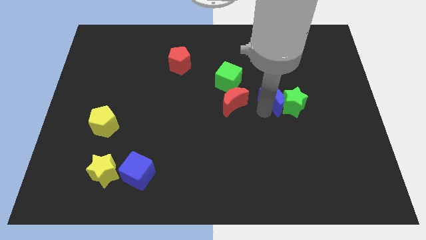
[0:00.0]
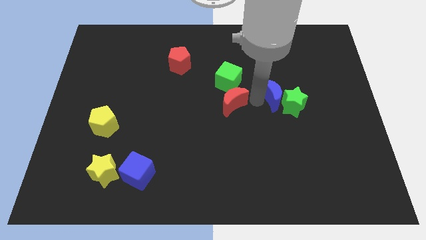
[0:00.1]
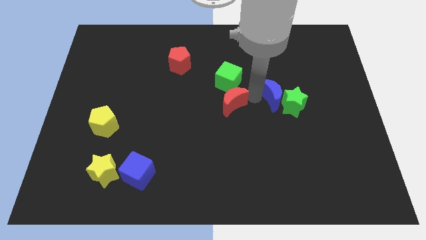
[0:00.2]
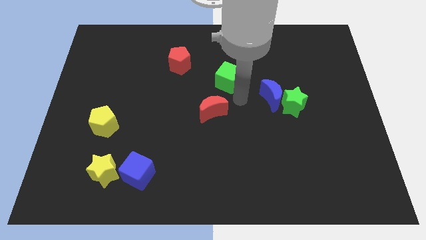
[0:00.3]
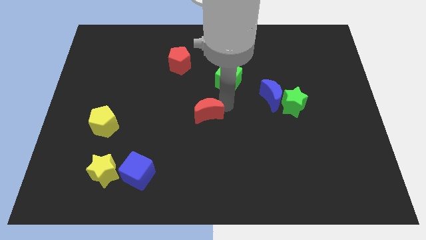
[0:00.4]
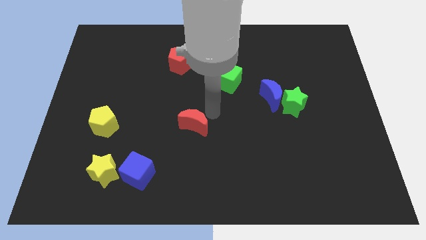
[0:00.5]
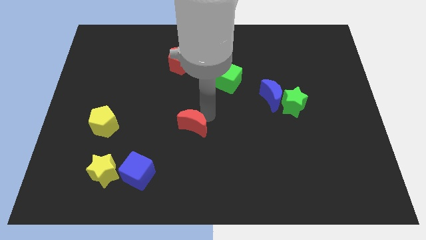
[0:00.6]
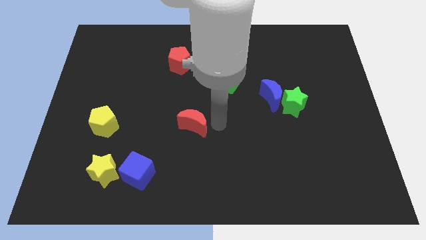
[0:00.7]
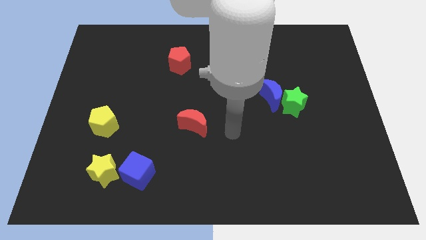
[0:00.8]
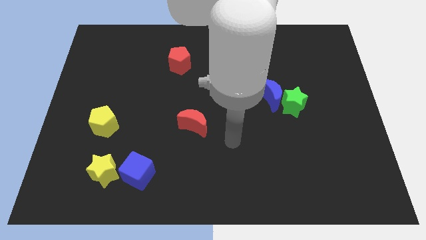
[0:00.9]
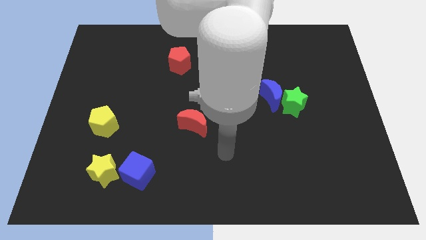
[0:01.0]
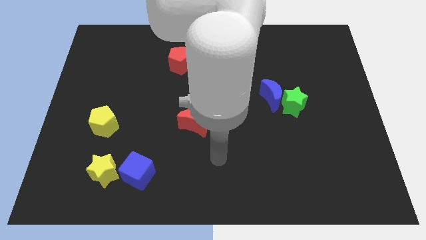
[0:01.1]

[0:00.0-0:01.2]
slightly push red crescent to the bottom center of the board

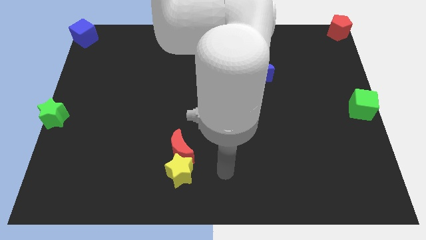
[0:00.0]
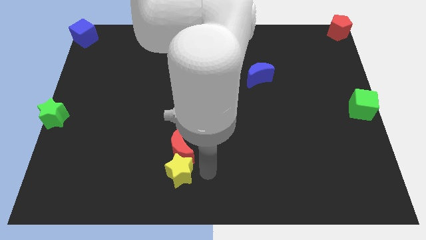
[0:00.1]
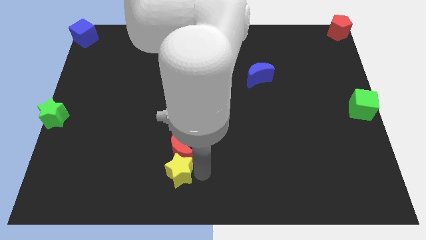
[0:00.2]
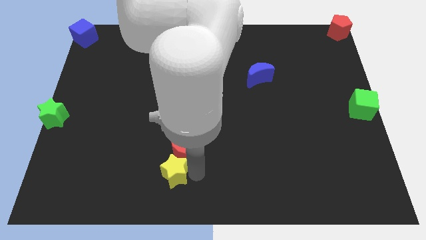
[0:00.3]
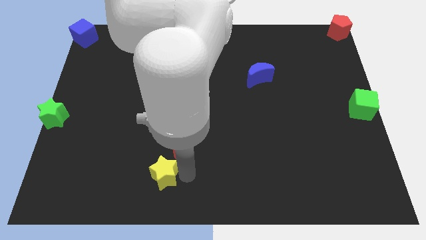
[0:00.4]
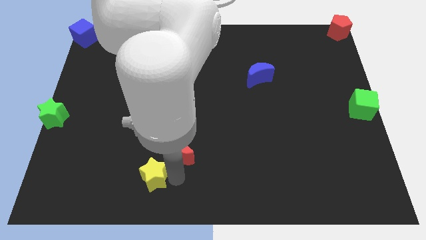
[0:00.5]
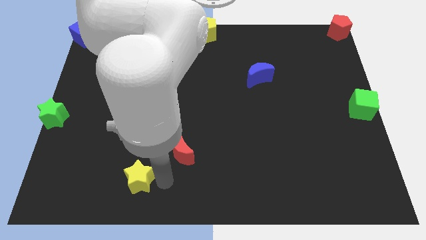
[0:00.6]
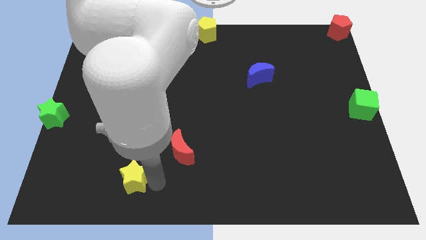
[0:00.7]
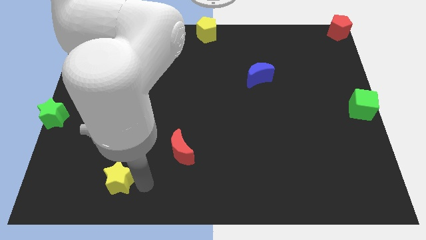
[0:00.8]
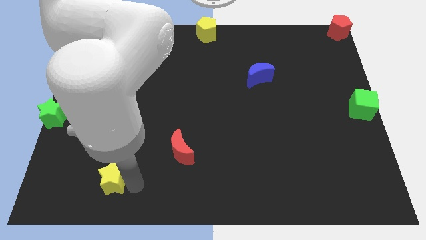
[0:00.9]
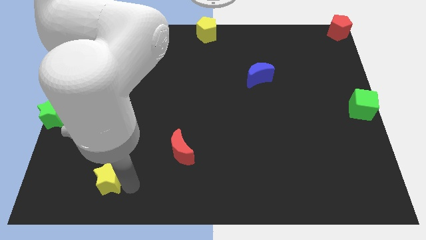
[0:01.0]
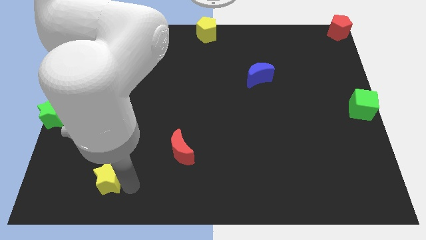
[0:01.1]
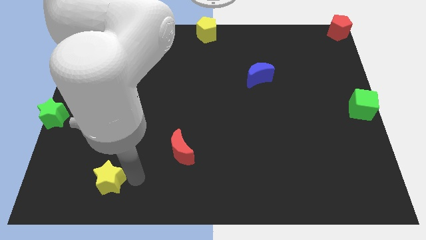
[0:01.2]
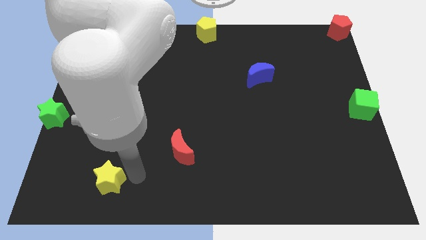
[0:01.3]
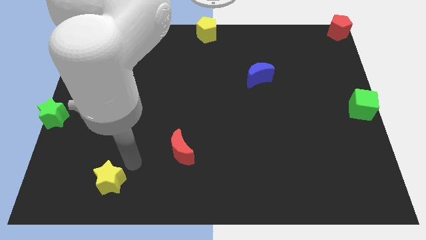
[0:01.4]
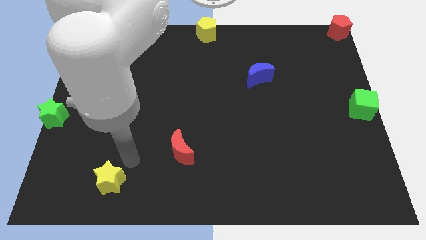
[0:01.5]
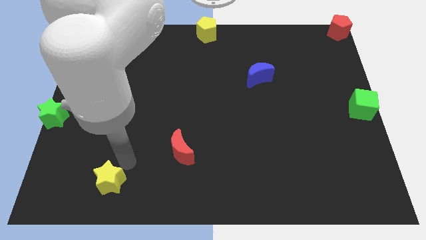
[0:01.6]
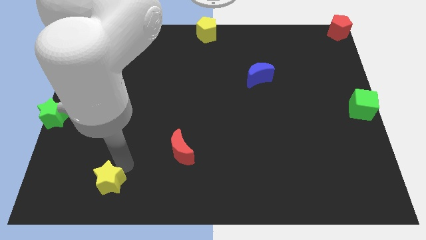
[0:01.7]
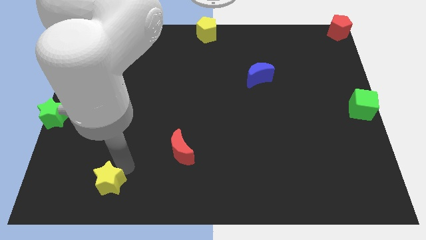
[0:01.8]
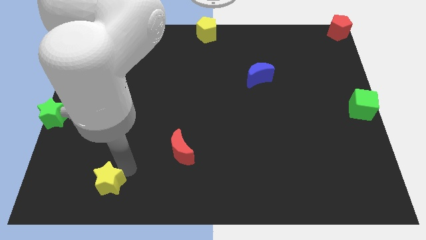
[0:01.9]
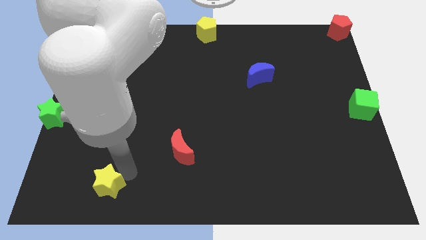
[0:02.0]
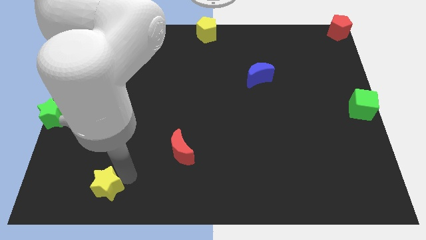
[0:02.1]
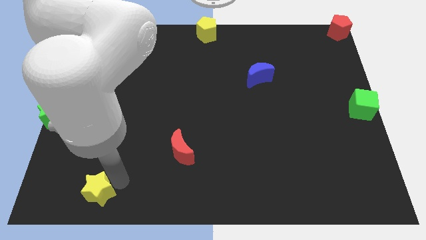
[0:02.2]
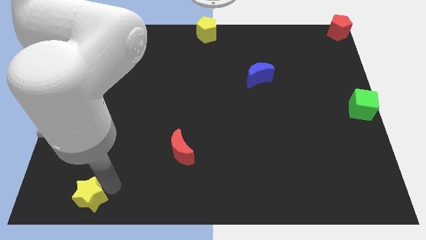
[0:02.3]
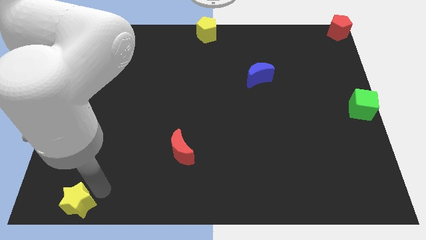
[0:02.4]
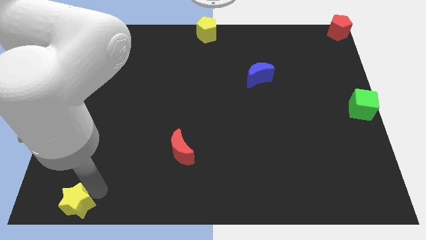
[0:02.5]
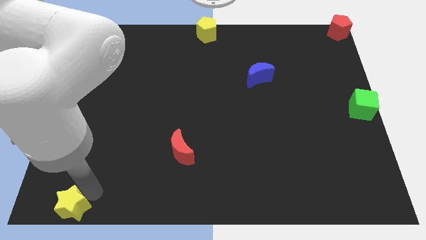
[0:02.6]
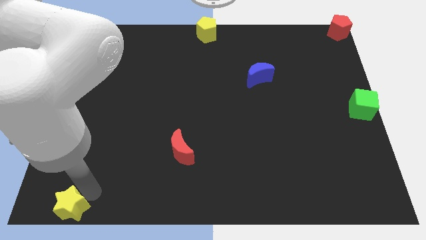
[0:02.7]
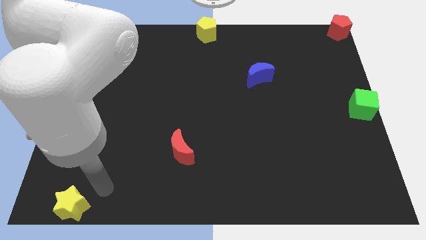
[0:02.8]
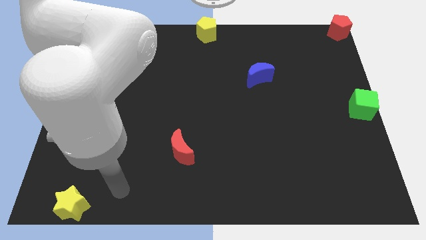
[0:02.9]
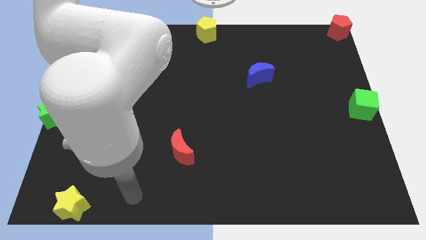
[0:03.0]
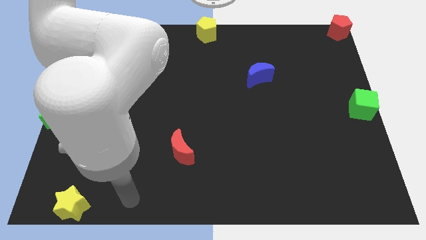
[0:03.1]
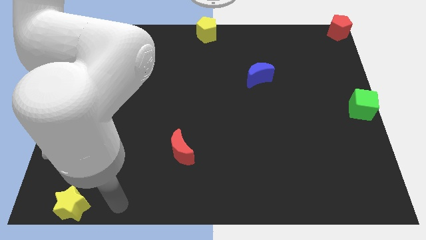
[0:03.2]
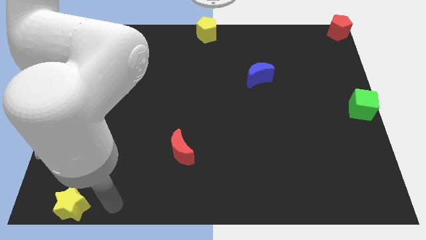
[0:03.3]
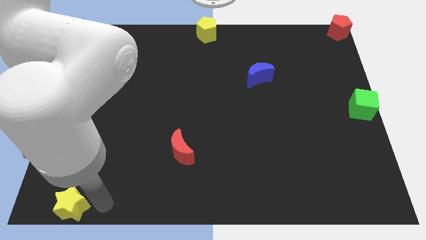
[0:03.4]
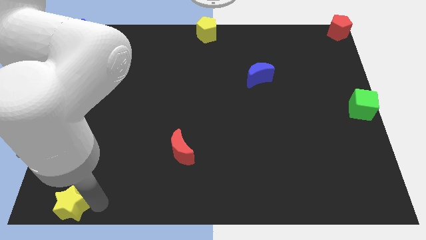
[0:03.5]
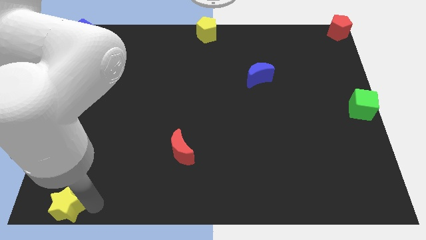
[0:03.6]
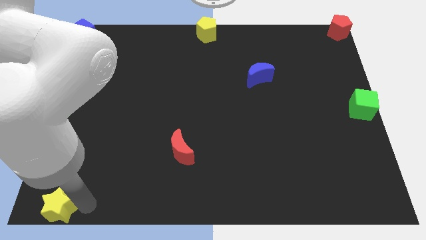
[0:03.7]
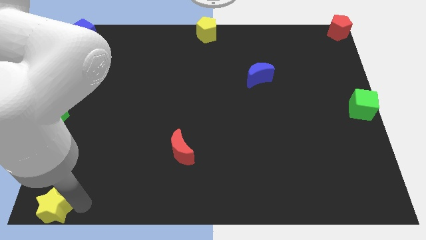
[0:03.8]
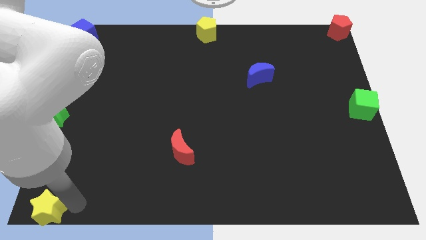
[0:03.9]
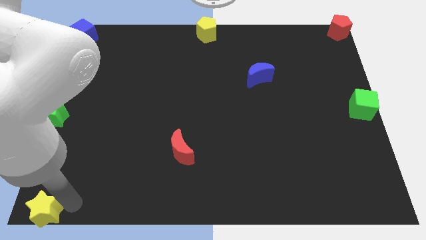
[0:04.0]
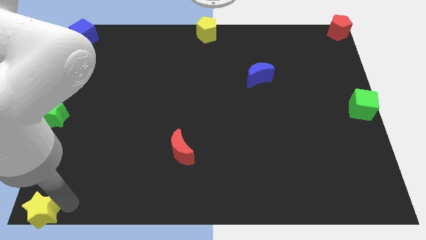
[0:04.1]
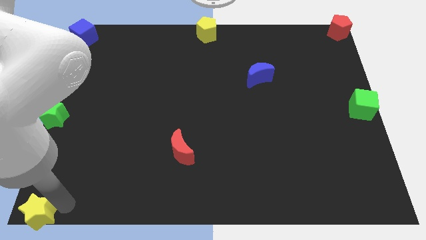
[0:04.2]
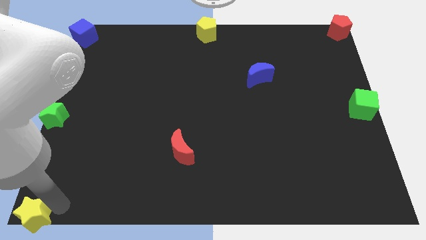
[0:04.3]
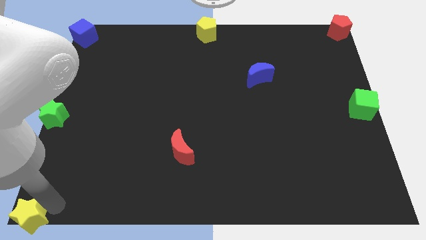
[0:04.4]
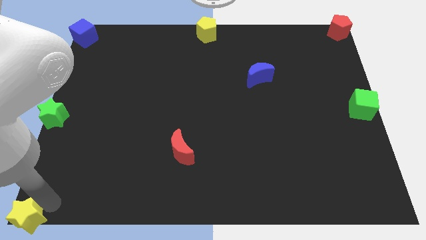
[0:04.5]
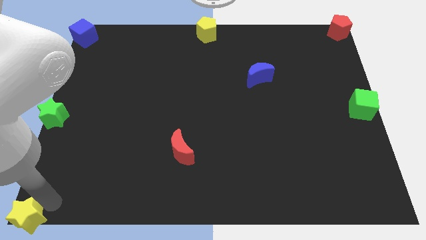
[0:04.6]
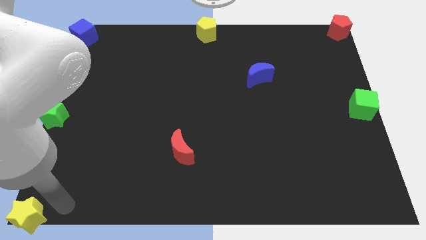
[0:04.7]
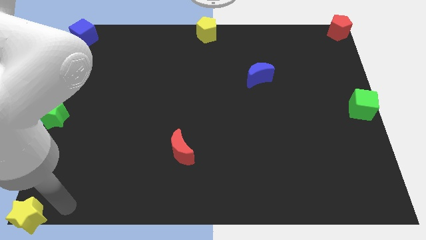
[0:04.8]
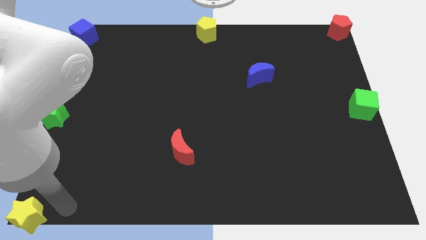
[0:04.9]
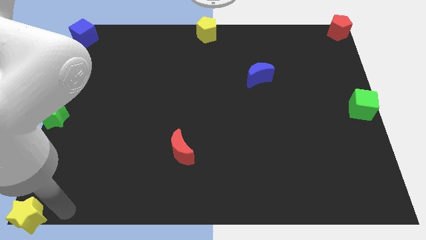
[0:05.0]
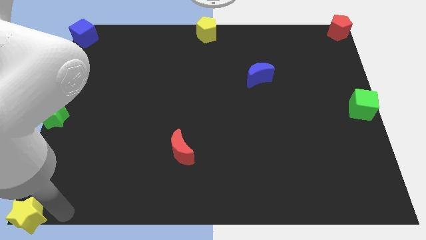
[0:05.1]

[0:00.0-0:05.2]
push yellow star to the bottom left

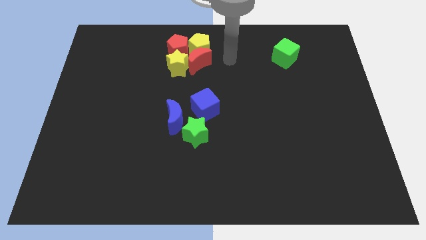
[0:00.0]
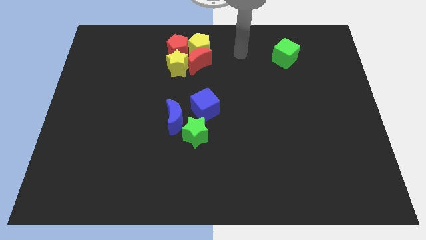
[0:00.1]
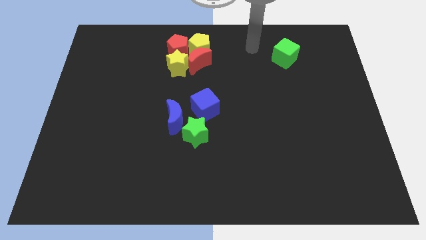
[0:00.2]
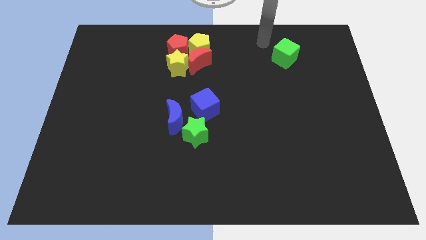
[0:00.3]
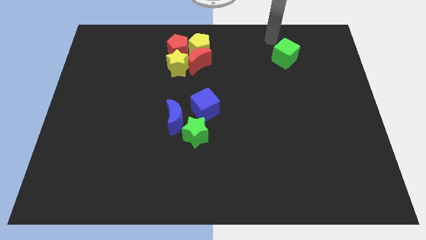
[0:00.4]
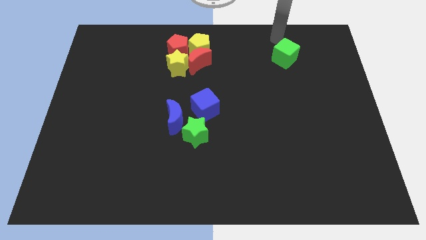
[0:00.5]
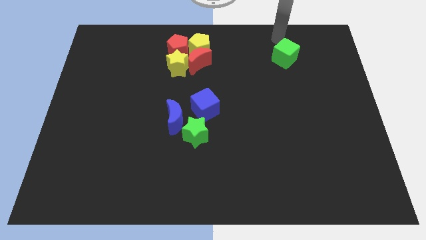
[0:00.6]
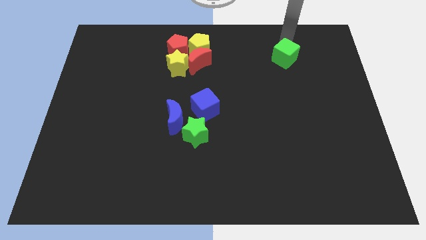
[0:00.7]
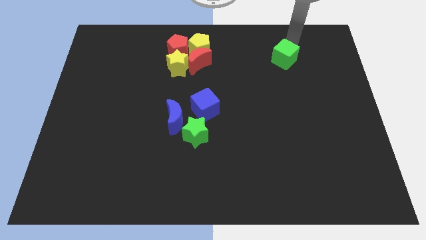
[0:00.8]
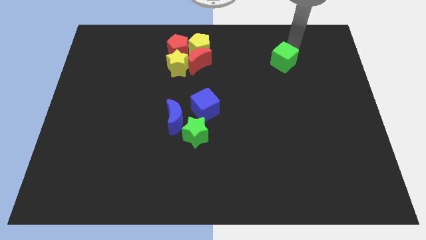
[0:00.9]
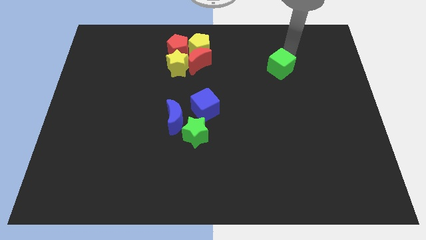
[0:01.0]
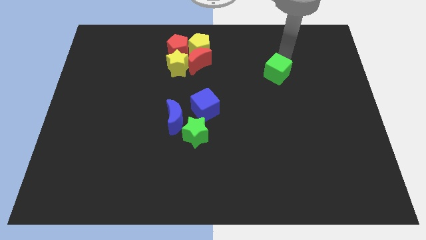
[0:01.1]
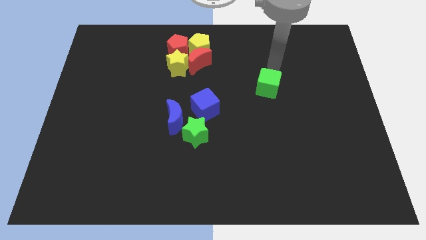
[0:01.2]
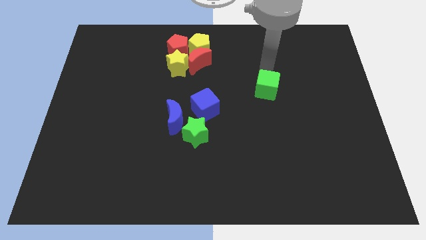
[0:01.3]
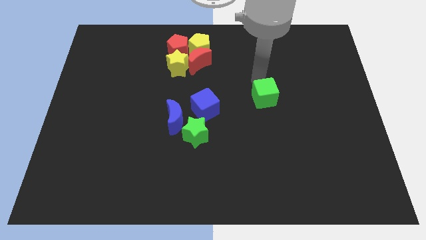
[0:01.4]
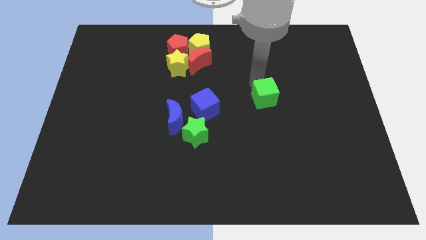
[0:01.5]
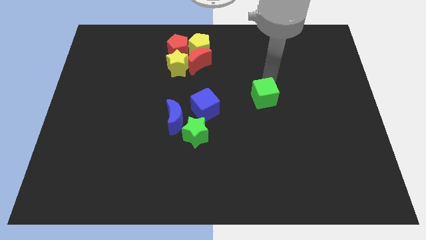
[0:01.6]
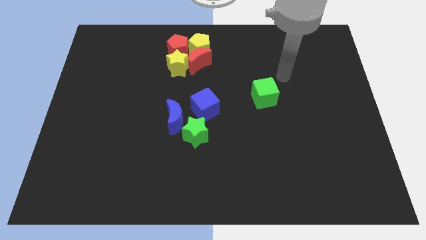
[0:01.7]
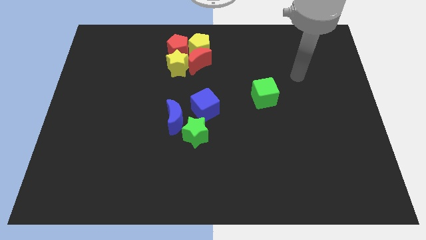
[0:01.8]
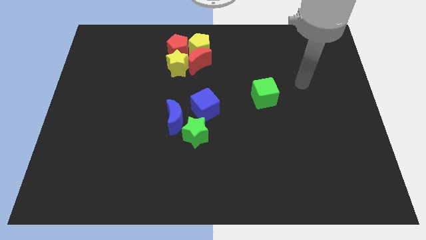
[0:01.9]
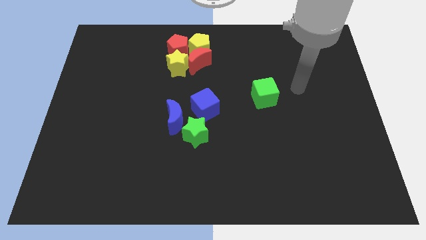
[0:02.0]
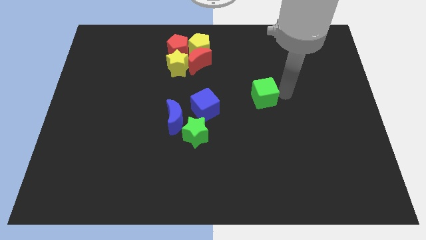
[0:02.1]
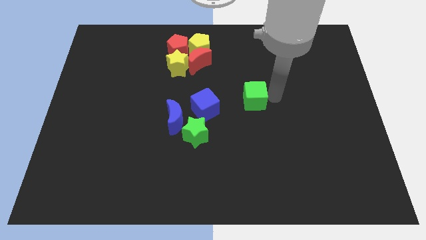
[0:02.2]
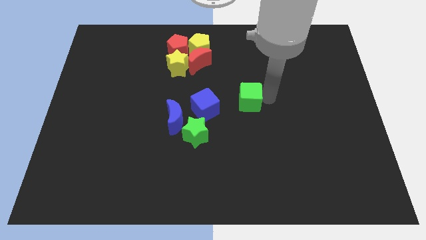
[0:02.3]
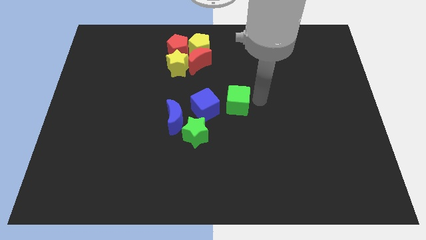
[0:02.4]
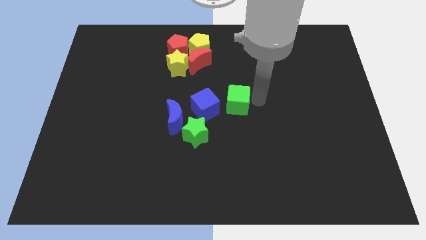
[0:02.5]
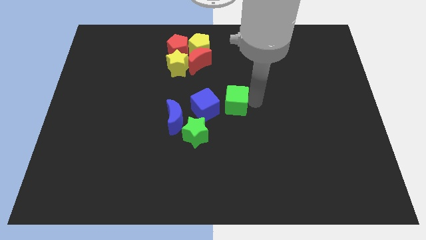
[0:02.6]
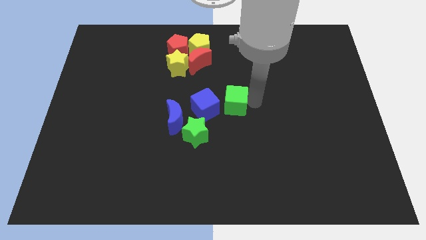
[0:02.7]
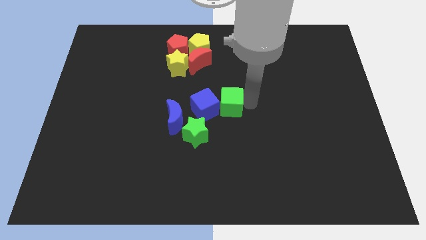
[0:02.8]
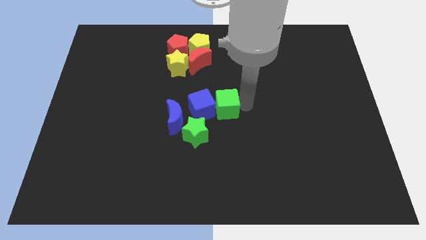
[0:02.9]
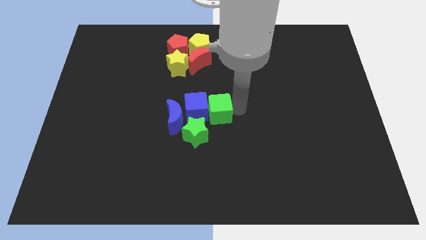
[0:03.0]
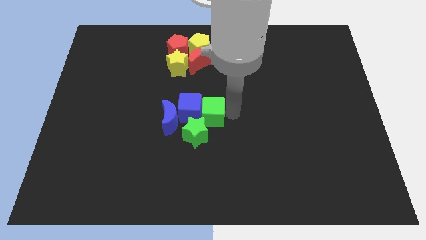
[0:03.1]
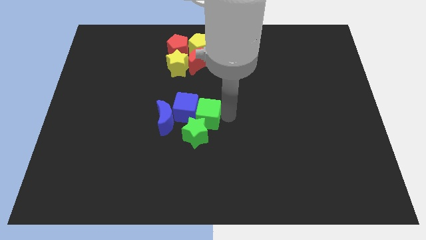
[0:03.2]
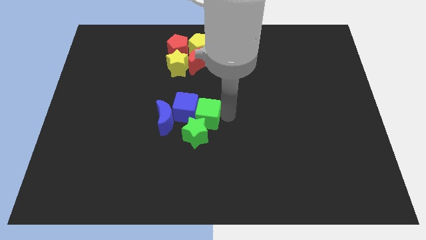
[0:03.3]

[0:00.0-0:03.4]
slide the green cube into the blue cube
